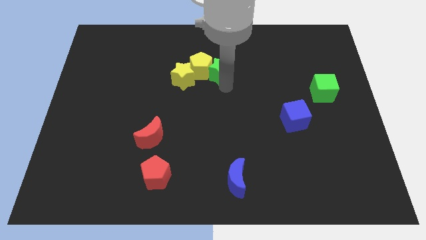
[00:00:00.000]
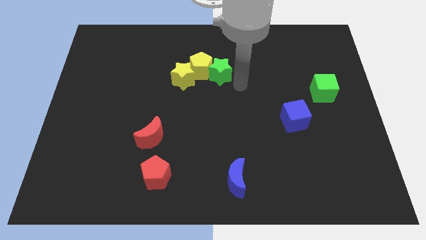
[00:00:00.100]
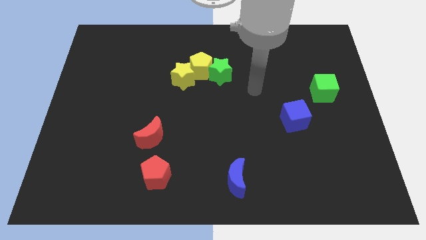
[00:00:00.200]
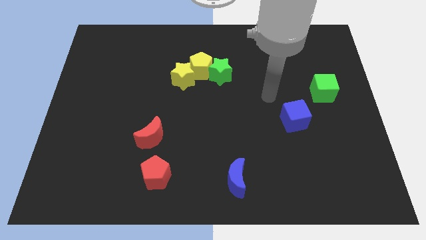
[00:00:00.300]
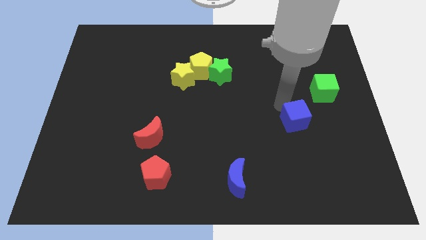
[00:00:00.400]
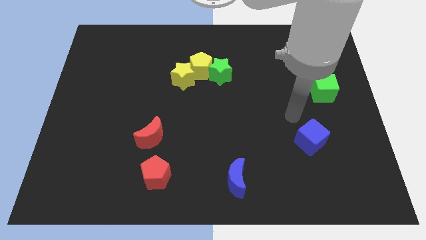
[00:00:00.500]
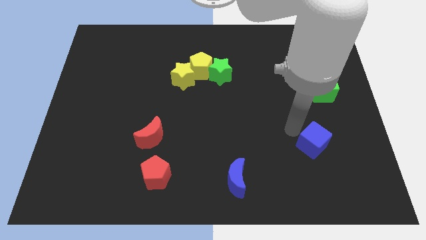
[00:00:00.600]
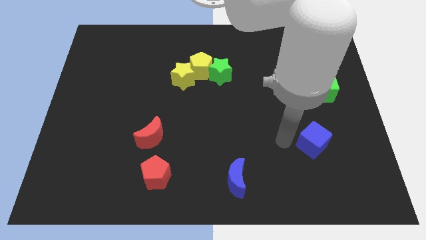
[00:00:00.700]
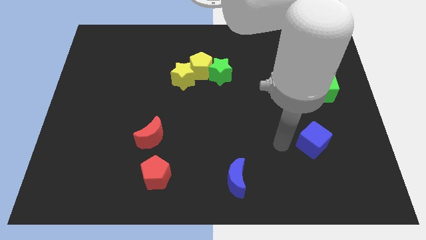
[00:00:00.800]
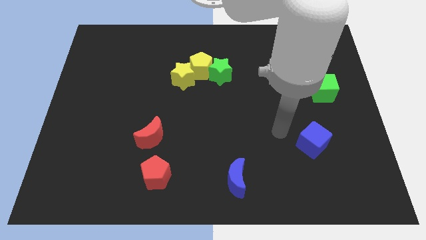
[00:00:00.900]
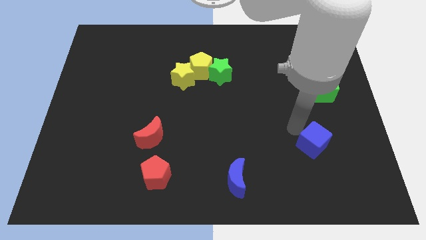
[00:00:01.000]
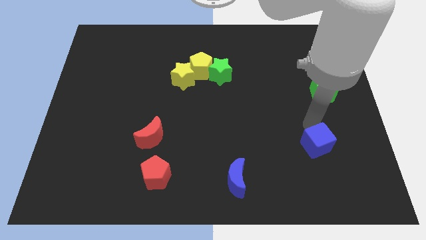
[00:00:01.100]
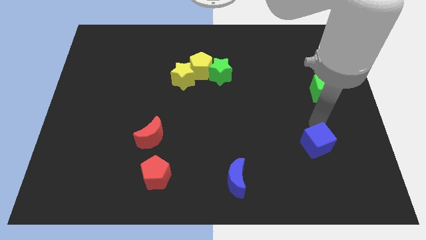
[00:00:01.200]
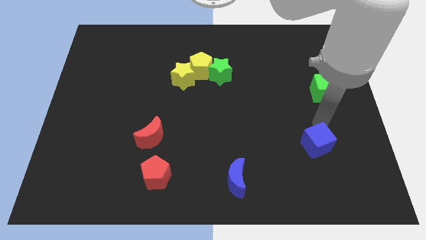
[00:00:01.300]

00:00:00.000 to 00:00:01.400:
move the blue cube to the bottom of the green cube

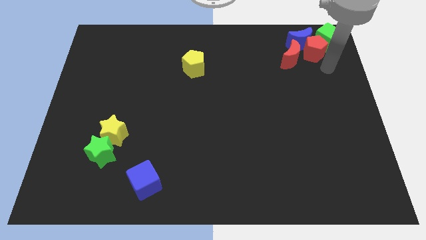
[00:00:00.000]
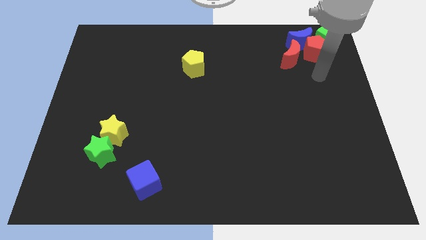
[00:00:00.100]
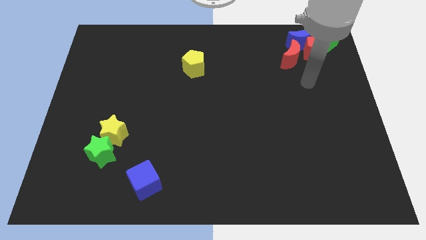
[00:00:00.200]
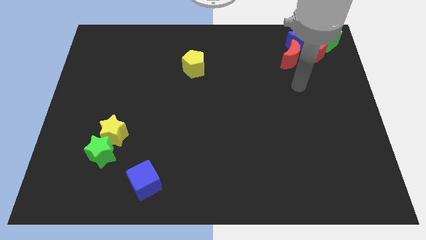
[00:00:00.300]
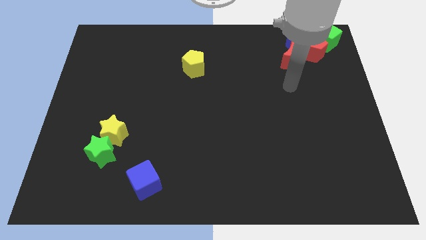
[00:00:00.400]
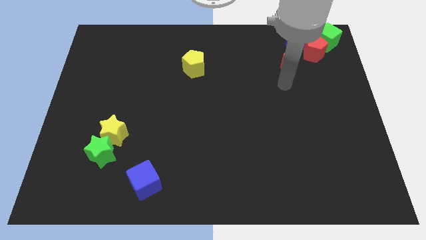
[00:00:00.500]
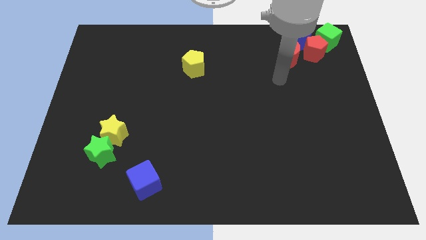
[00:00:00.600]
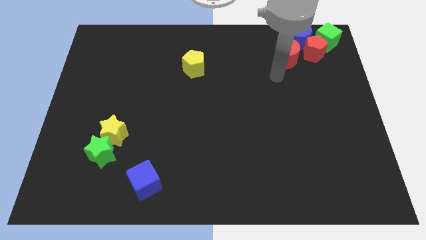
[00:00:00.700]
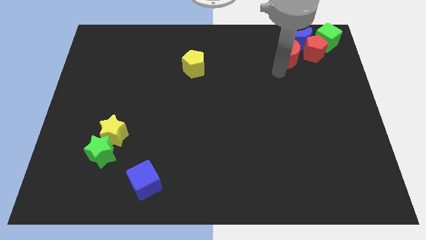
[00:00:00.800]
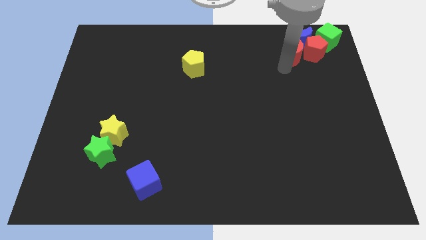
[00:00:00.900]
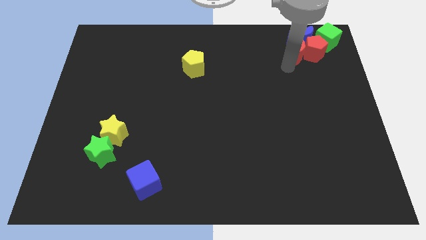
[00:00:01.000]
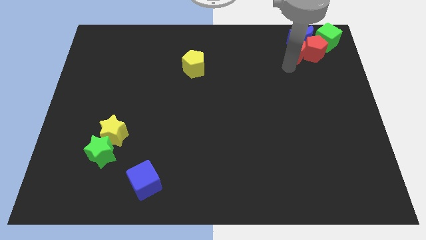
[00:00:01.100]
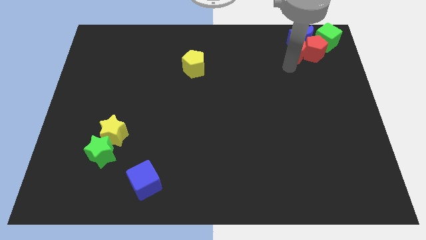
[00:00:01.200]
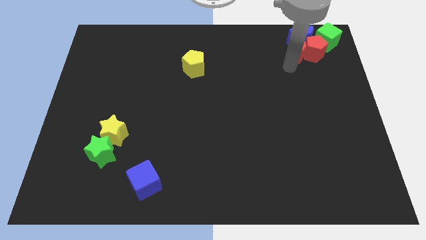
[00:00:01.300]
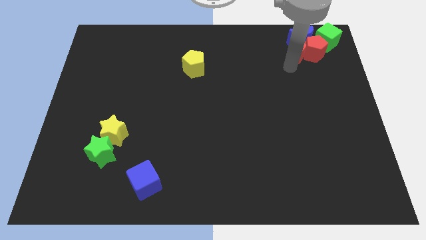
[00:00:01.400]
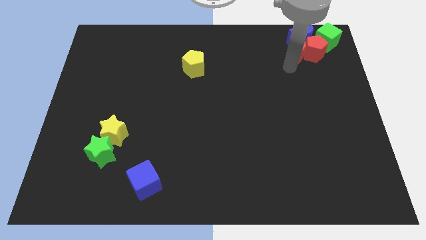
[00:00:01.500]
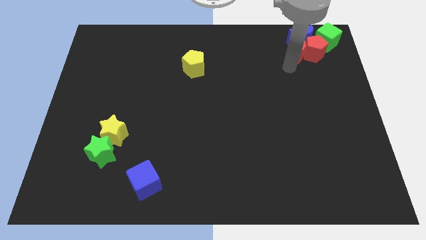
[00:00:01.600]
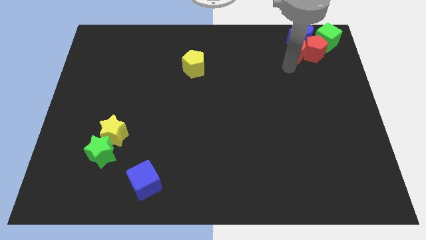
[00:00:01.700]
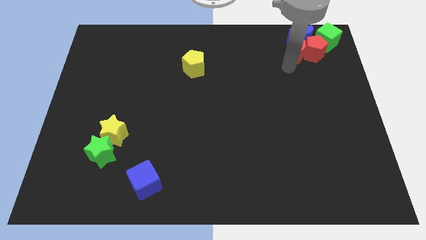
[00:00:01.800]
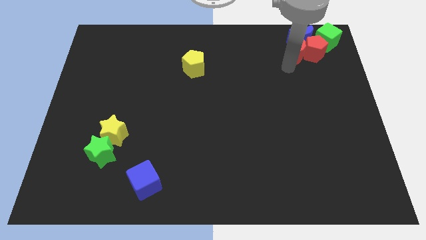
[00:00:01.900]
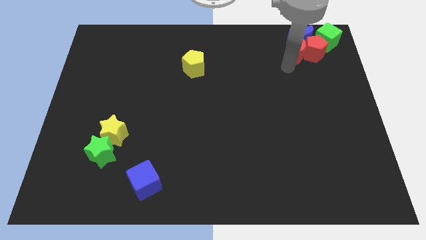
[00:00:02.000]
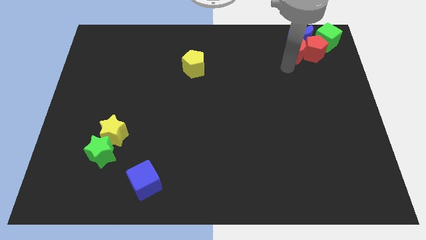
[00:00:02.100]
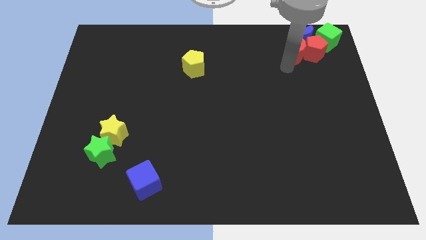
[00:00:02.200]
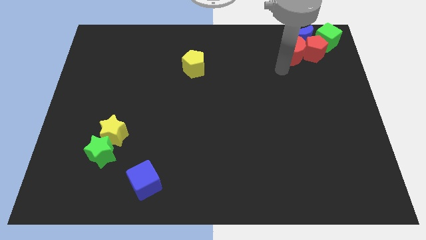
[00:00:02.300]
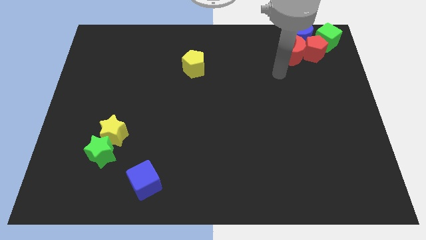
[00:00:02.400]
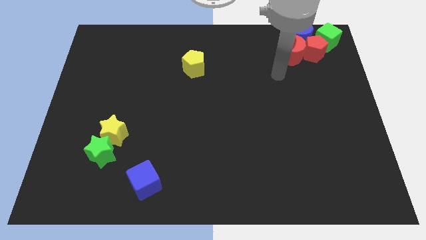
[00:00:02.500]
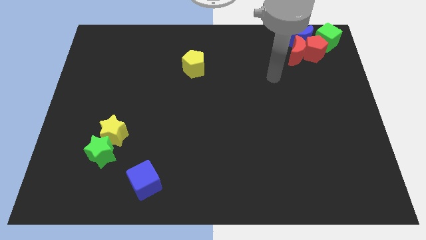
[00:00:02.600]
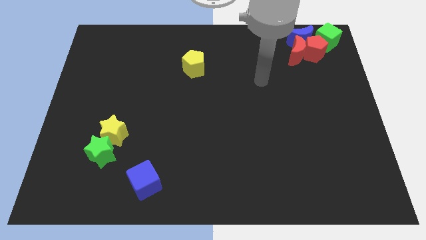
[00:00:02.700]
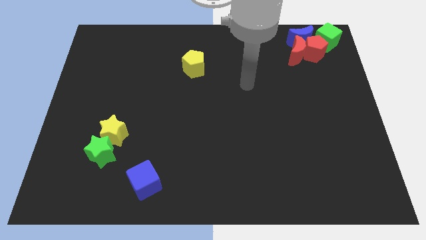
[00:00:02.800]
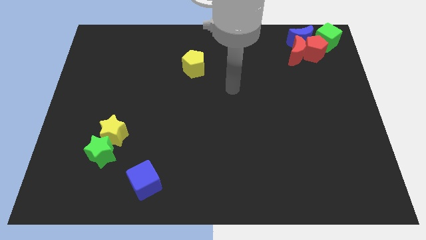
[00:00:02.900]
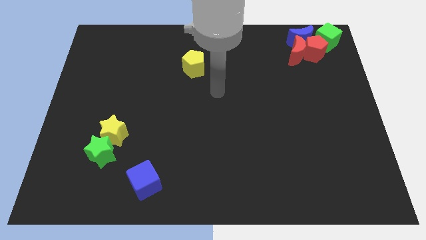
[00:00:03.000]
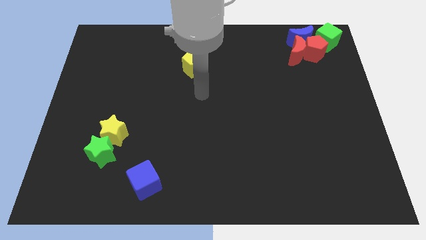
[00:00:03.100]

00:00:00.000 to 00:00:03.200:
move the red crescent towards the red pentagon

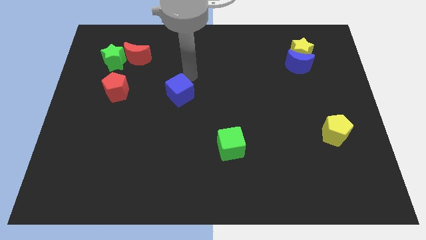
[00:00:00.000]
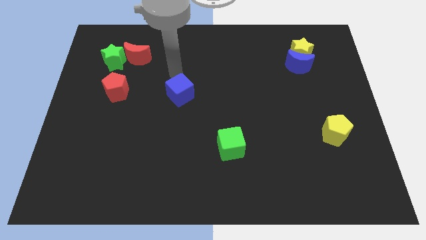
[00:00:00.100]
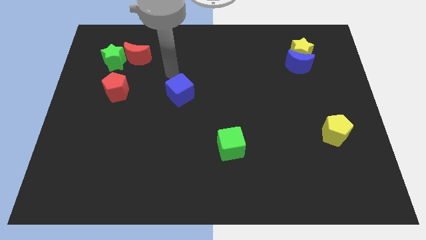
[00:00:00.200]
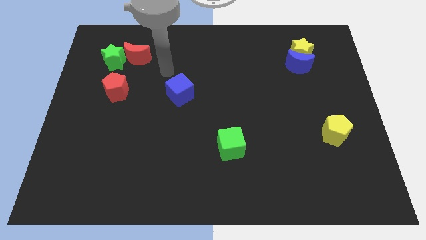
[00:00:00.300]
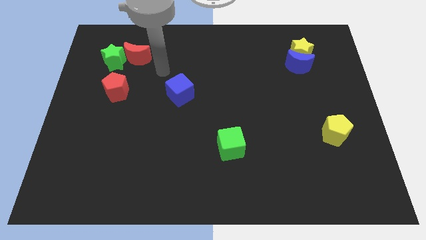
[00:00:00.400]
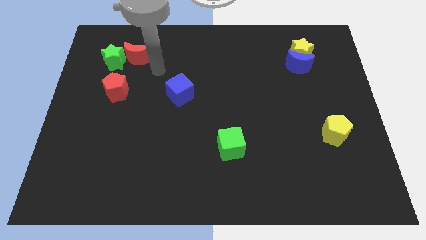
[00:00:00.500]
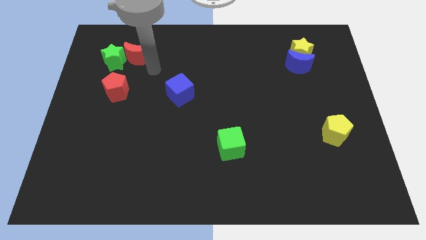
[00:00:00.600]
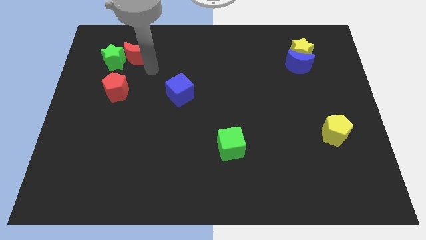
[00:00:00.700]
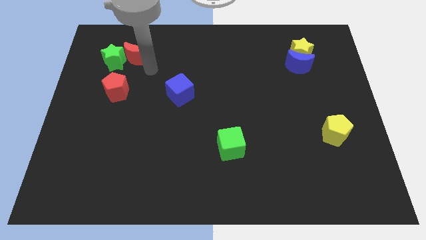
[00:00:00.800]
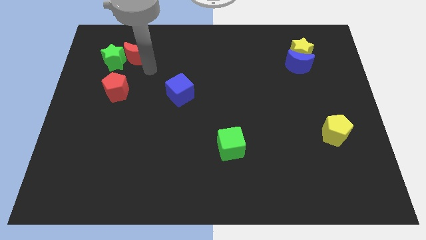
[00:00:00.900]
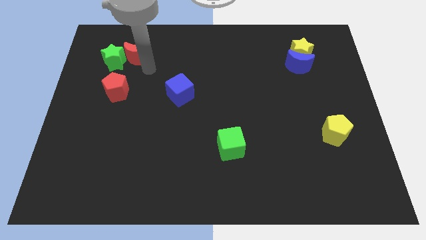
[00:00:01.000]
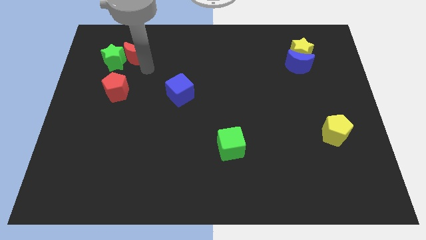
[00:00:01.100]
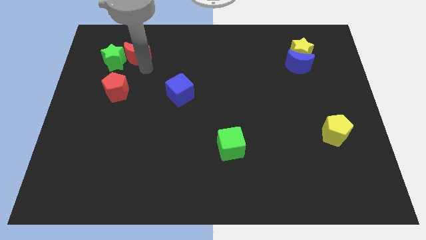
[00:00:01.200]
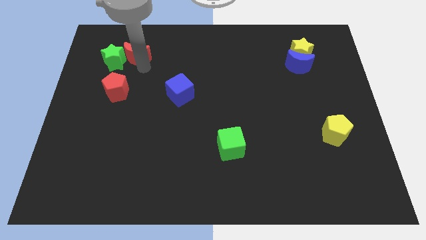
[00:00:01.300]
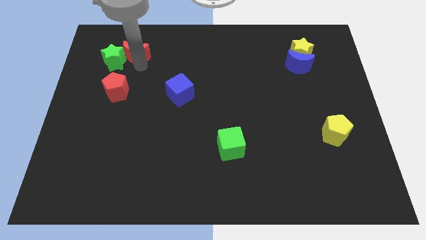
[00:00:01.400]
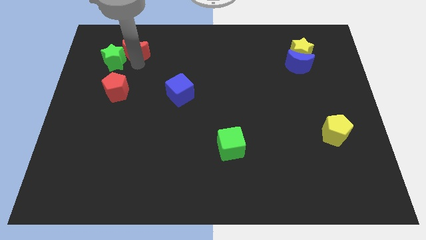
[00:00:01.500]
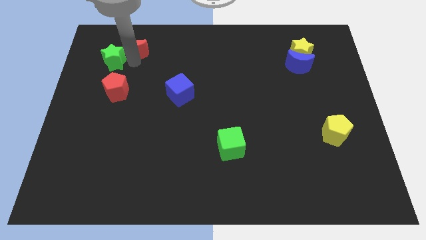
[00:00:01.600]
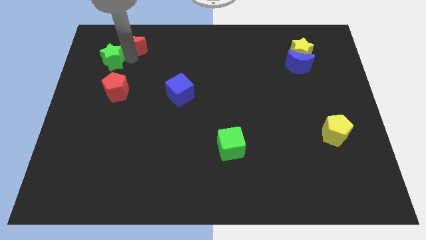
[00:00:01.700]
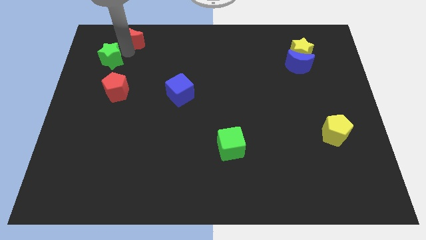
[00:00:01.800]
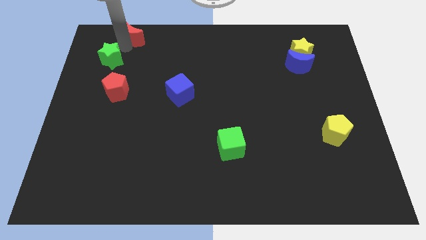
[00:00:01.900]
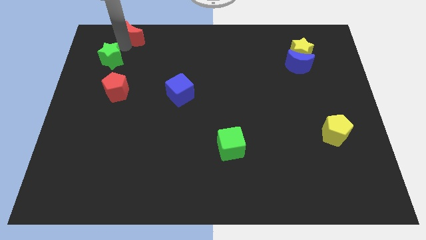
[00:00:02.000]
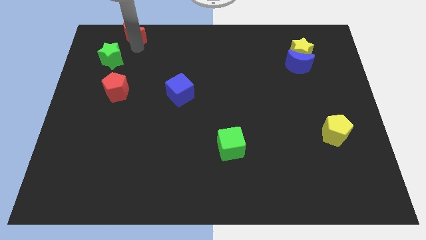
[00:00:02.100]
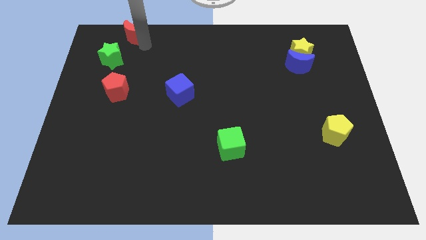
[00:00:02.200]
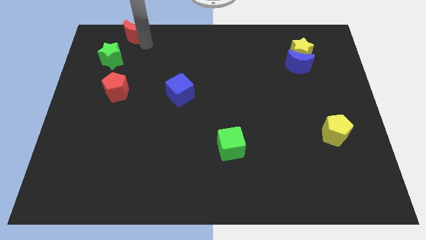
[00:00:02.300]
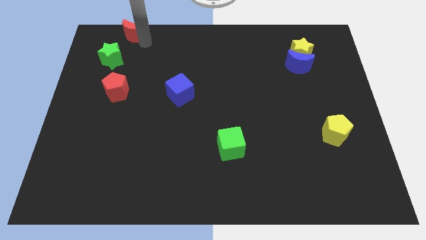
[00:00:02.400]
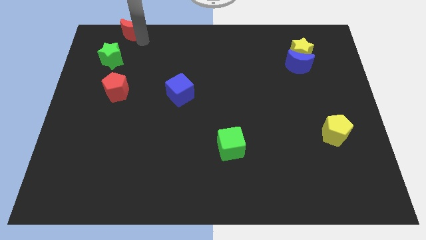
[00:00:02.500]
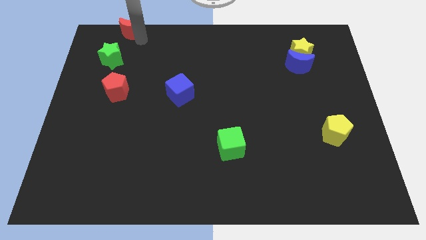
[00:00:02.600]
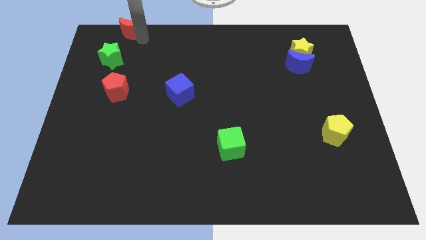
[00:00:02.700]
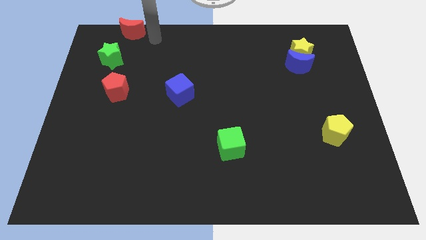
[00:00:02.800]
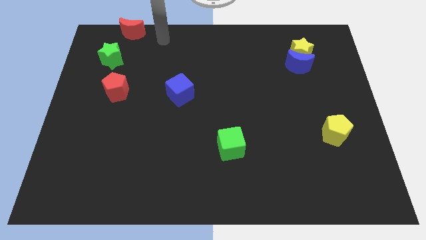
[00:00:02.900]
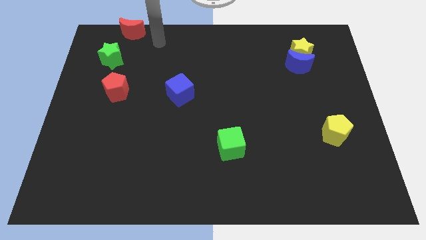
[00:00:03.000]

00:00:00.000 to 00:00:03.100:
move the red moon to the top of the board

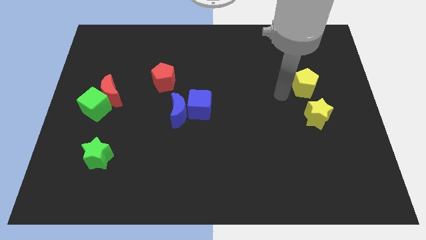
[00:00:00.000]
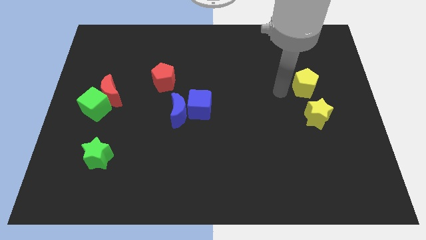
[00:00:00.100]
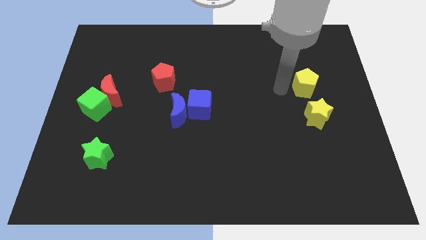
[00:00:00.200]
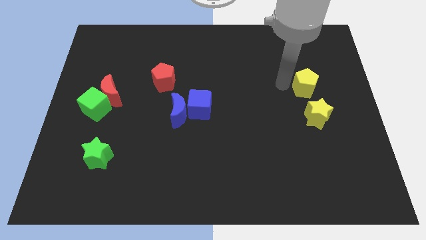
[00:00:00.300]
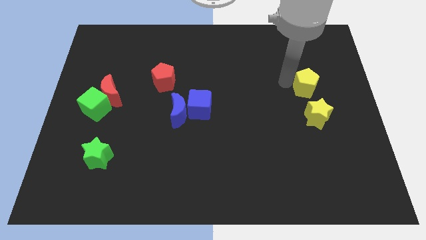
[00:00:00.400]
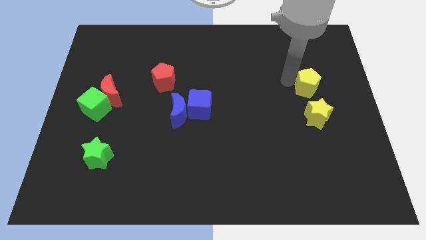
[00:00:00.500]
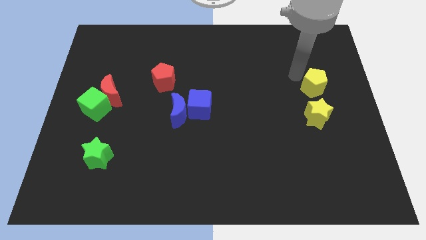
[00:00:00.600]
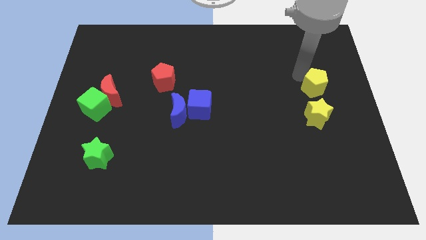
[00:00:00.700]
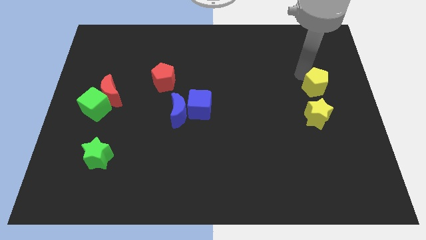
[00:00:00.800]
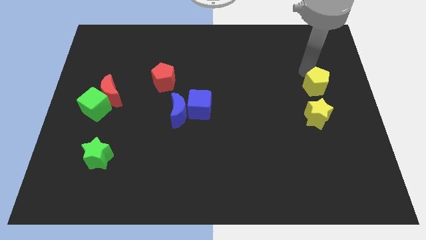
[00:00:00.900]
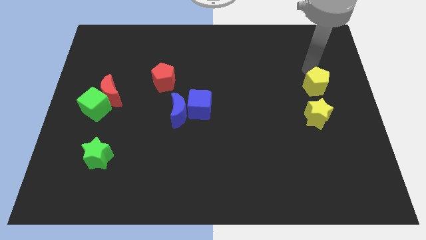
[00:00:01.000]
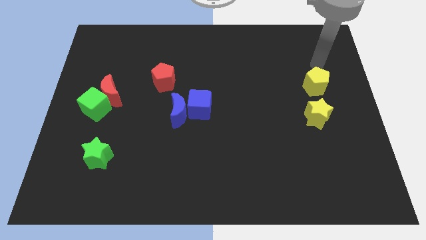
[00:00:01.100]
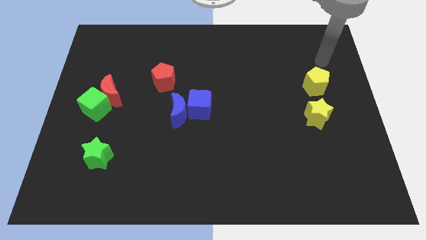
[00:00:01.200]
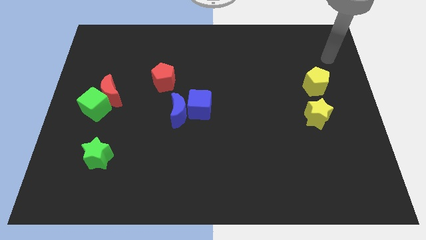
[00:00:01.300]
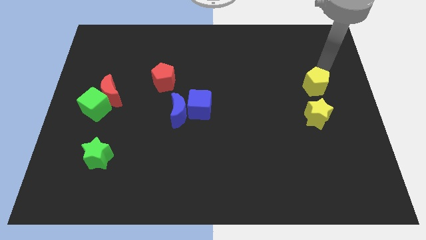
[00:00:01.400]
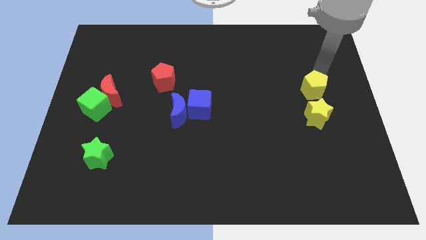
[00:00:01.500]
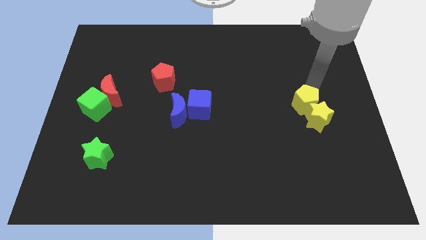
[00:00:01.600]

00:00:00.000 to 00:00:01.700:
move the yellow pentagon and yellow star to the center right of the board
